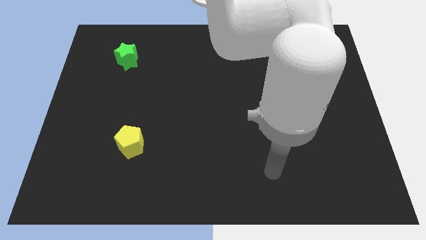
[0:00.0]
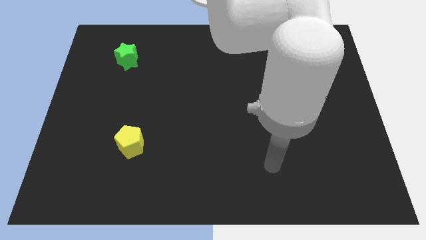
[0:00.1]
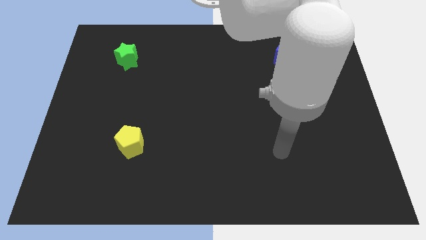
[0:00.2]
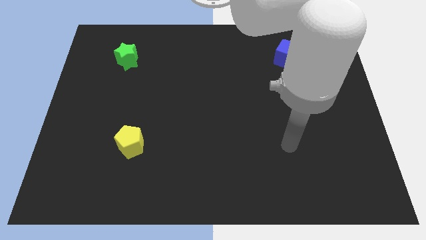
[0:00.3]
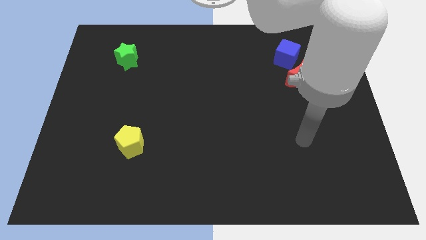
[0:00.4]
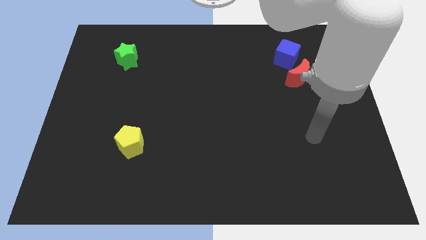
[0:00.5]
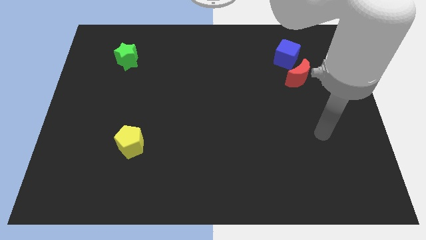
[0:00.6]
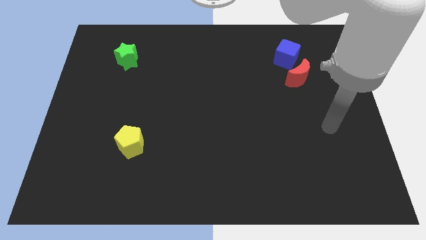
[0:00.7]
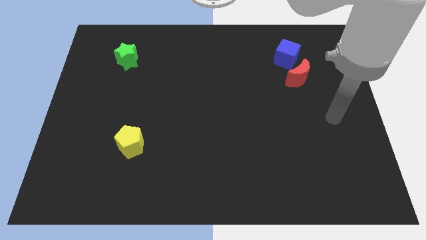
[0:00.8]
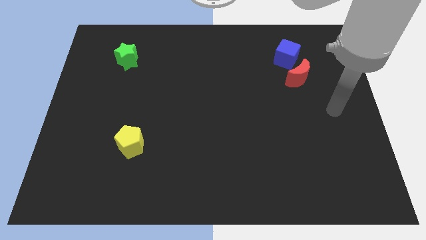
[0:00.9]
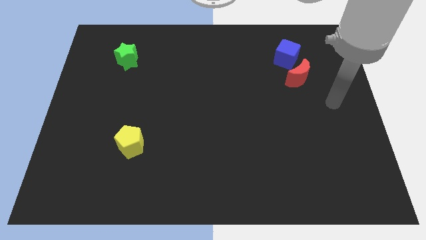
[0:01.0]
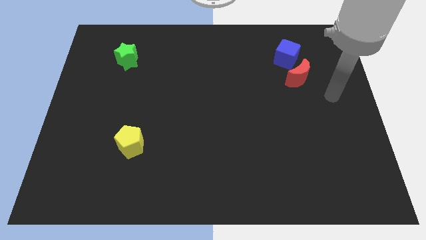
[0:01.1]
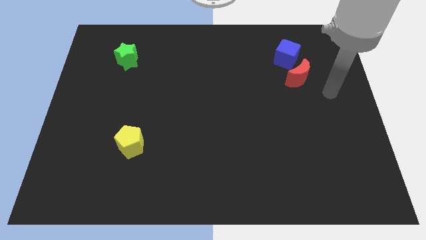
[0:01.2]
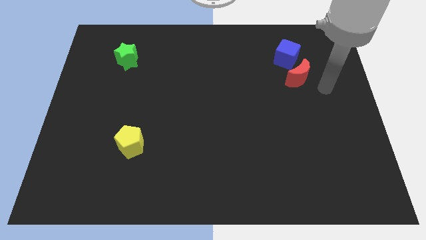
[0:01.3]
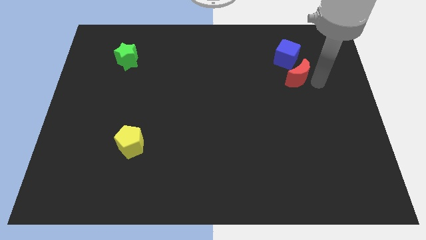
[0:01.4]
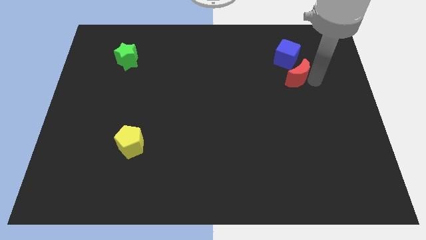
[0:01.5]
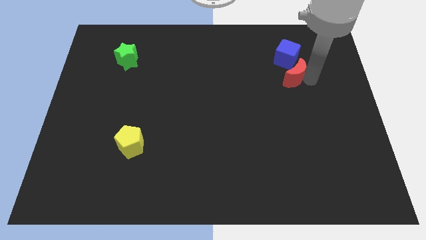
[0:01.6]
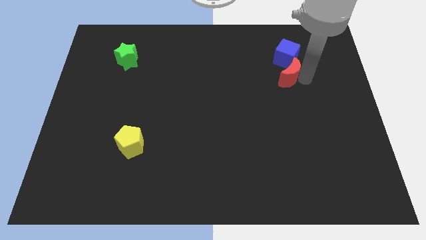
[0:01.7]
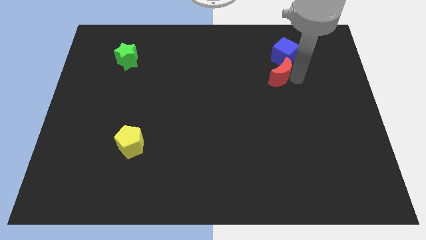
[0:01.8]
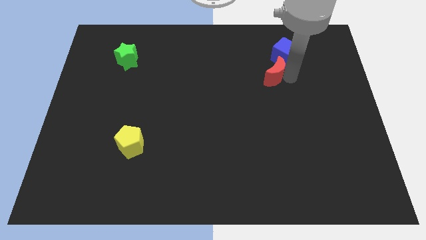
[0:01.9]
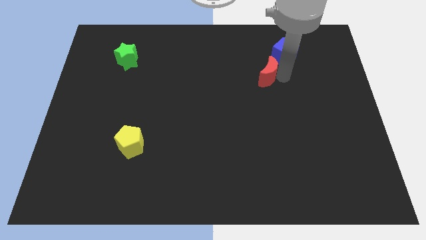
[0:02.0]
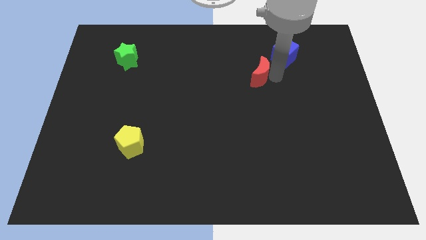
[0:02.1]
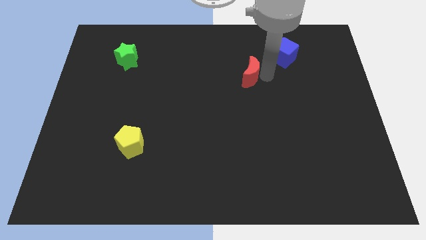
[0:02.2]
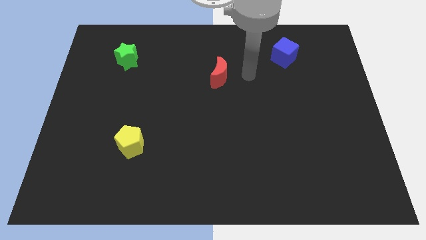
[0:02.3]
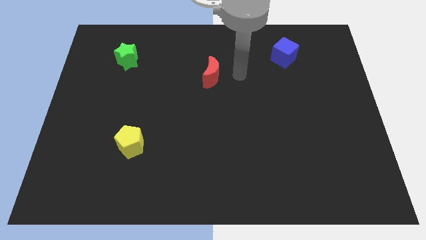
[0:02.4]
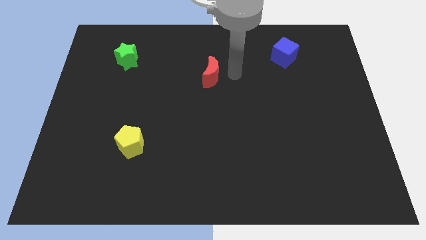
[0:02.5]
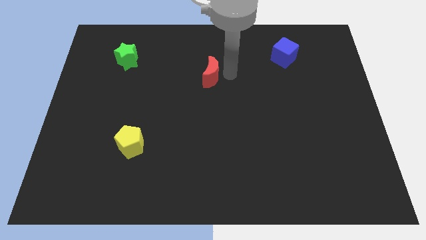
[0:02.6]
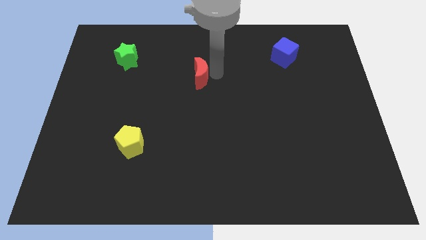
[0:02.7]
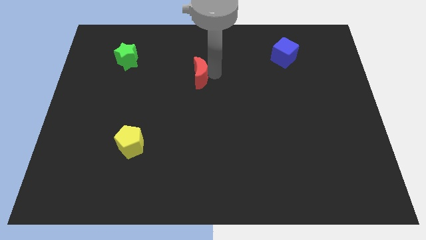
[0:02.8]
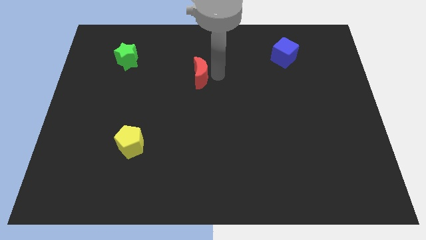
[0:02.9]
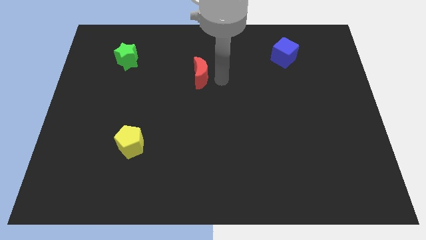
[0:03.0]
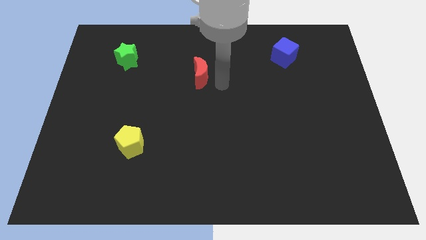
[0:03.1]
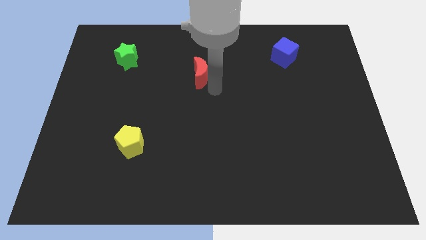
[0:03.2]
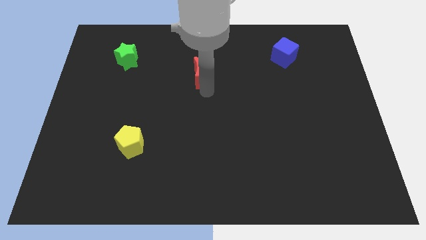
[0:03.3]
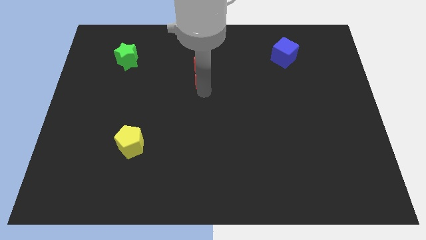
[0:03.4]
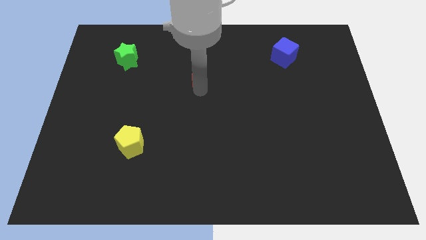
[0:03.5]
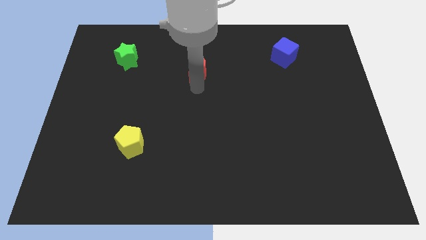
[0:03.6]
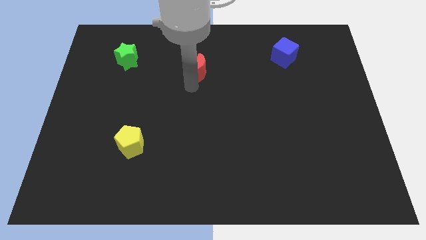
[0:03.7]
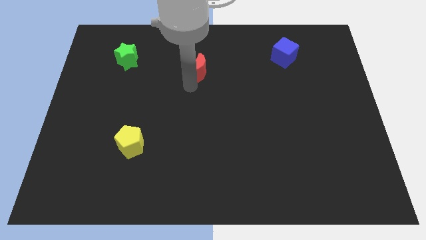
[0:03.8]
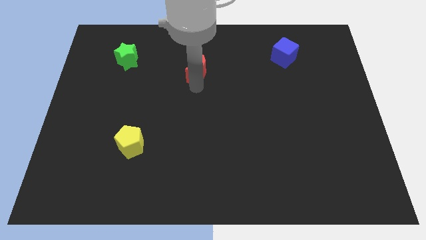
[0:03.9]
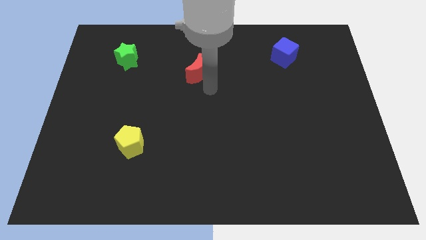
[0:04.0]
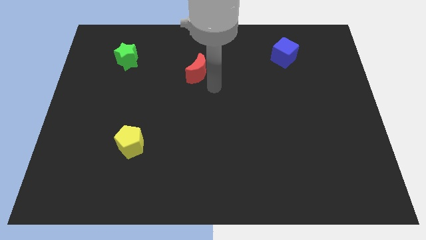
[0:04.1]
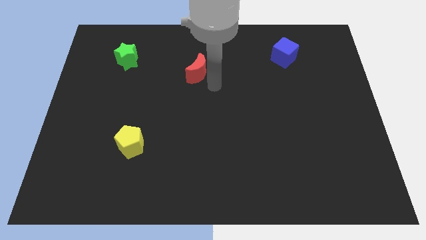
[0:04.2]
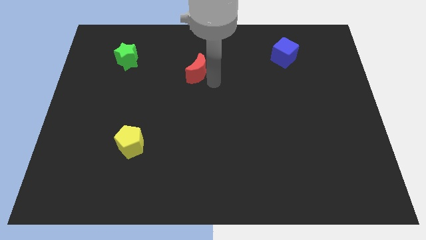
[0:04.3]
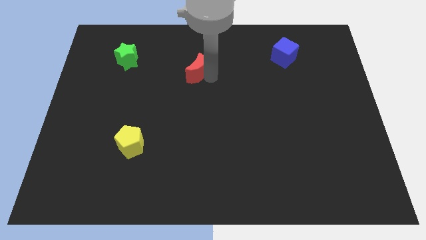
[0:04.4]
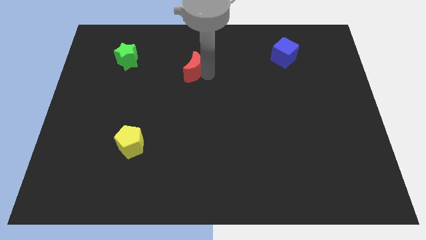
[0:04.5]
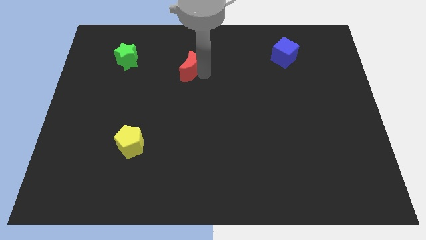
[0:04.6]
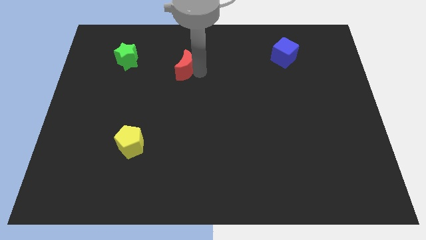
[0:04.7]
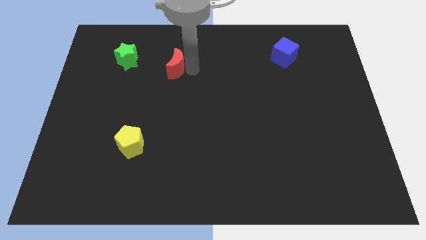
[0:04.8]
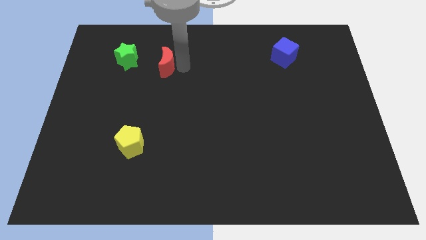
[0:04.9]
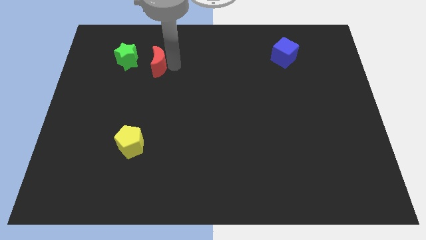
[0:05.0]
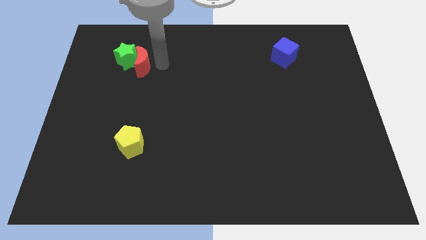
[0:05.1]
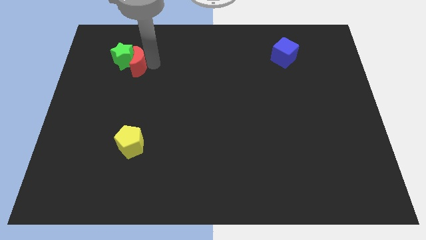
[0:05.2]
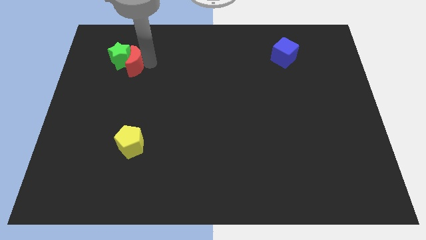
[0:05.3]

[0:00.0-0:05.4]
push the red moon next to the green star

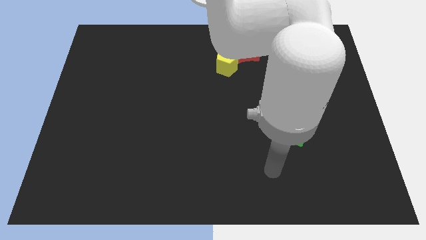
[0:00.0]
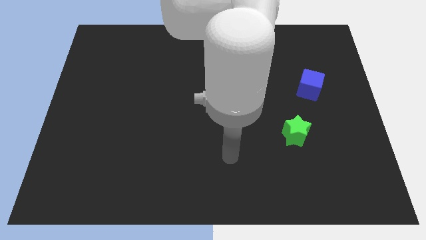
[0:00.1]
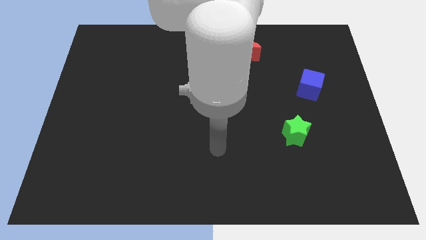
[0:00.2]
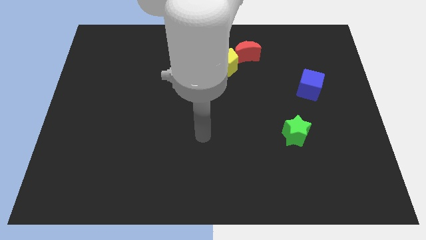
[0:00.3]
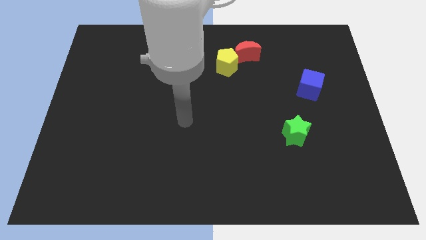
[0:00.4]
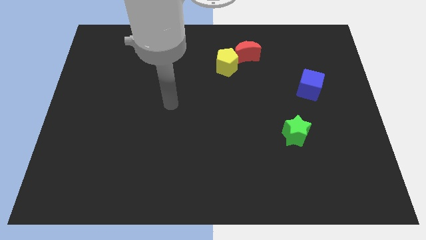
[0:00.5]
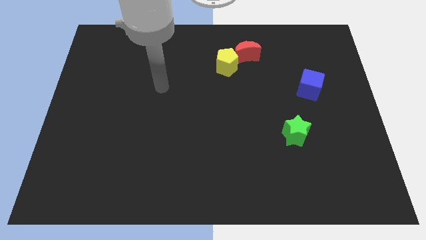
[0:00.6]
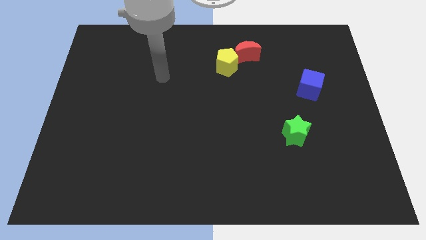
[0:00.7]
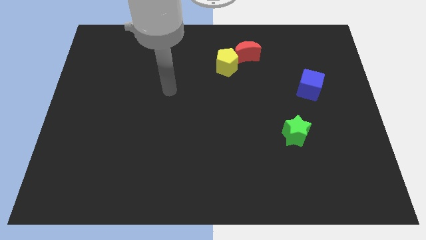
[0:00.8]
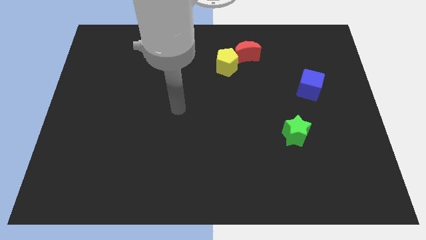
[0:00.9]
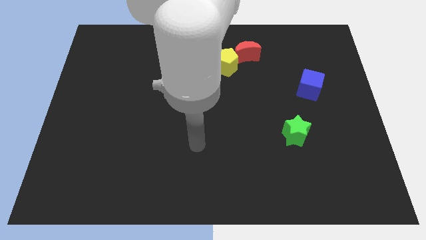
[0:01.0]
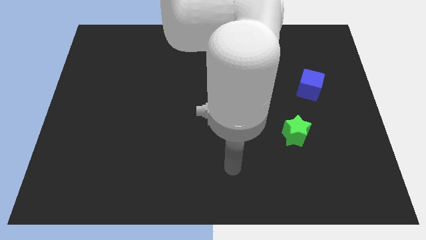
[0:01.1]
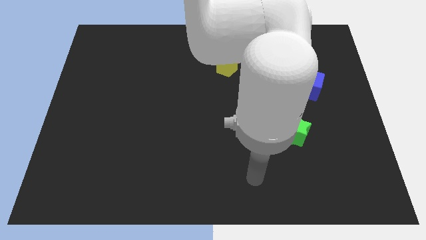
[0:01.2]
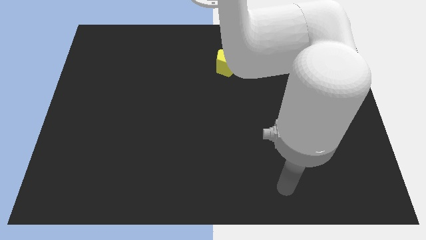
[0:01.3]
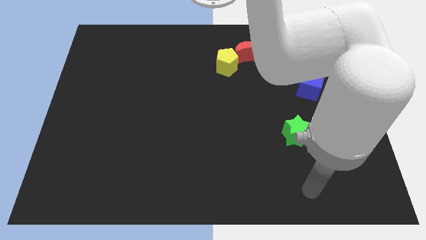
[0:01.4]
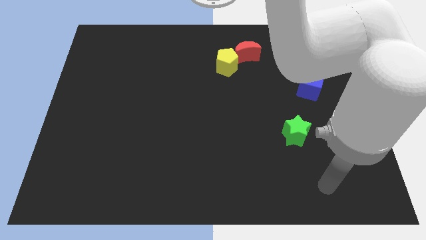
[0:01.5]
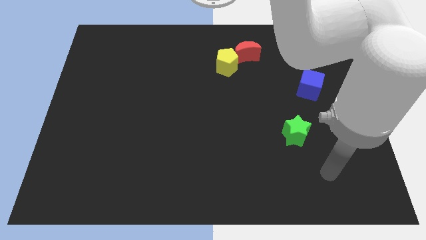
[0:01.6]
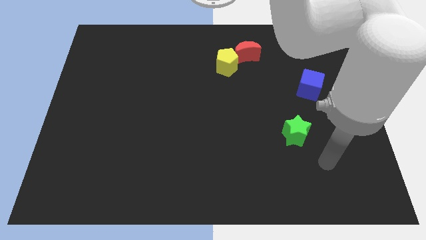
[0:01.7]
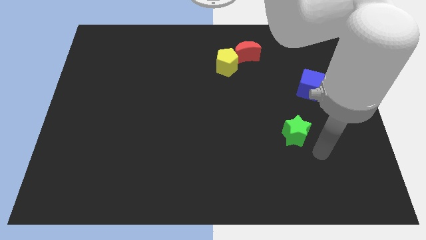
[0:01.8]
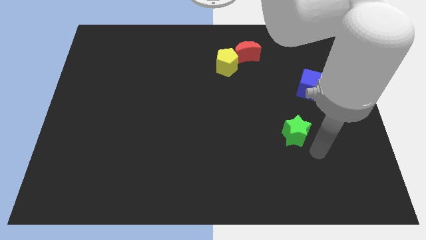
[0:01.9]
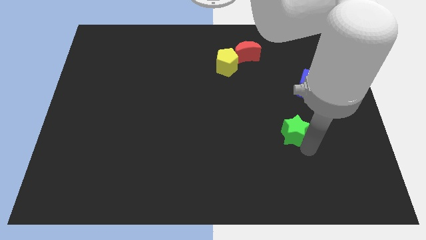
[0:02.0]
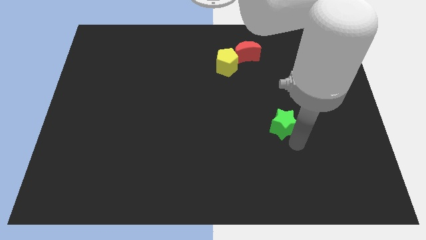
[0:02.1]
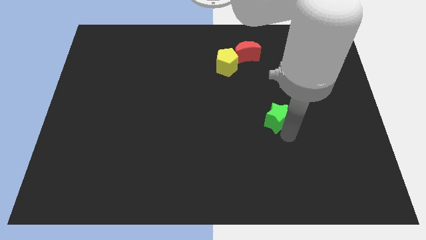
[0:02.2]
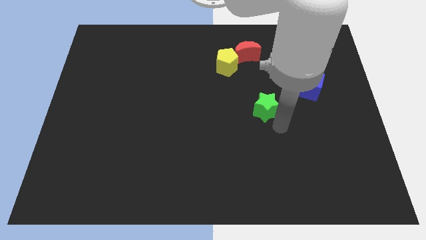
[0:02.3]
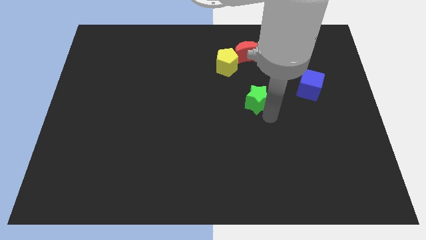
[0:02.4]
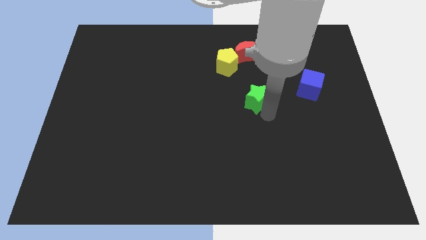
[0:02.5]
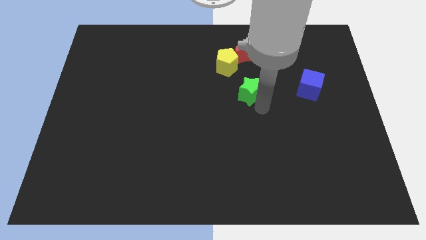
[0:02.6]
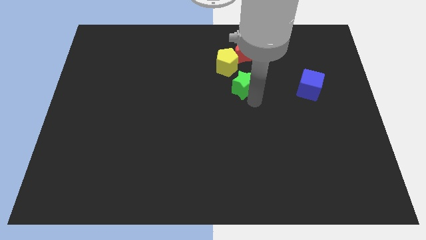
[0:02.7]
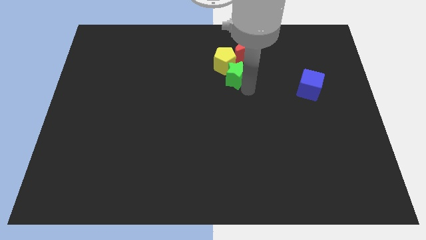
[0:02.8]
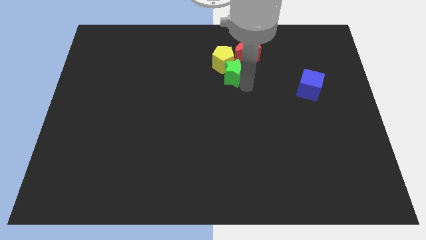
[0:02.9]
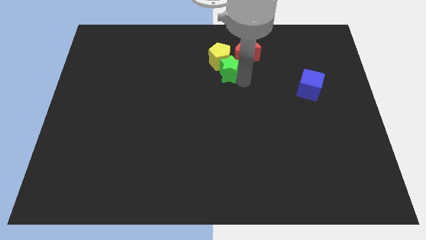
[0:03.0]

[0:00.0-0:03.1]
put the green star close to the pentagon
